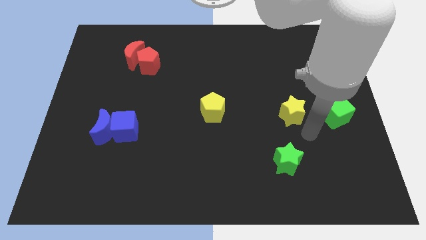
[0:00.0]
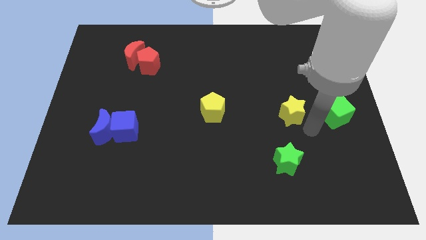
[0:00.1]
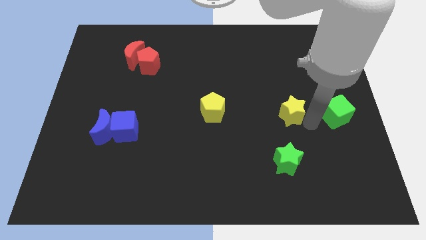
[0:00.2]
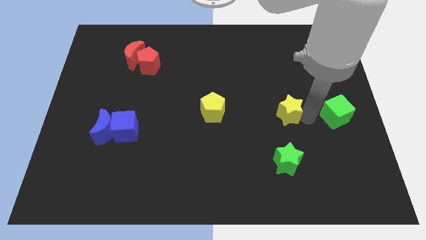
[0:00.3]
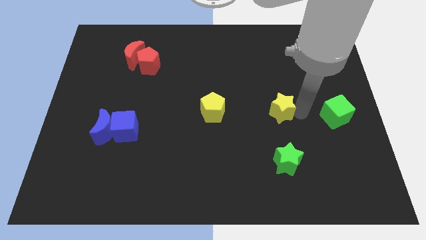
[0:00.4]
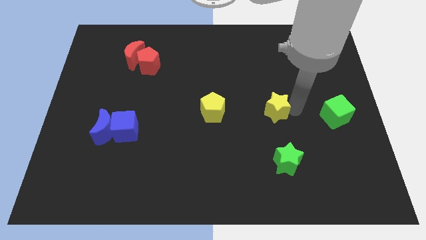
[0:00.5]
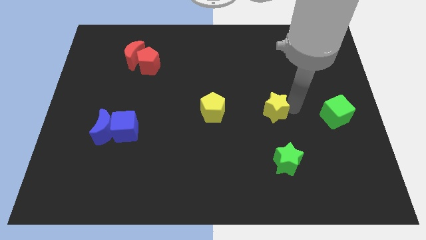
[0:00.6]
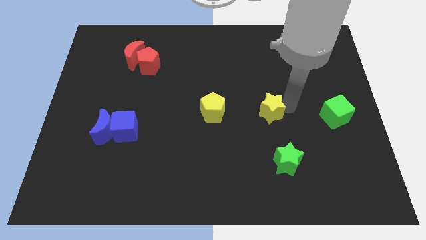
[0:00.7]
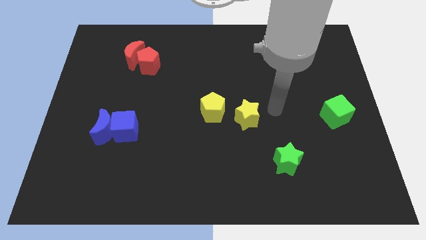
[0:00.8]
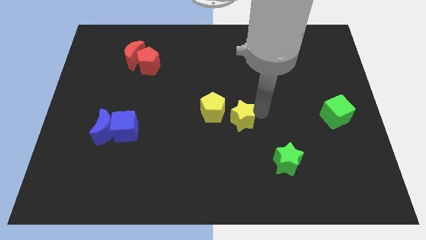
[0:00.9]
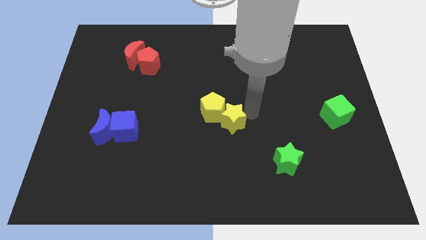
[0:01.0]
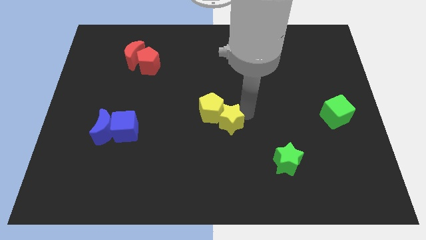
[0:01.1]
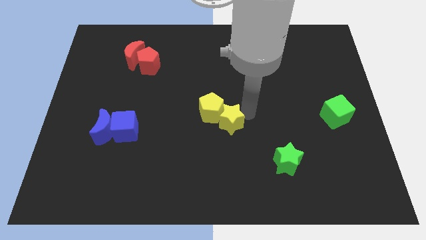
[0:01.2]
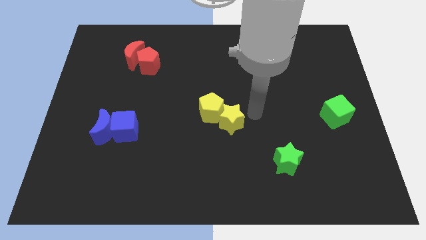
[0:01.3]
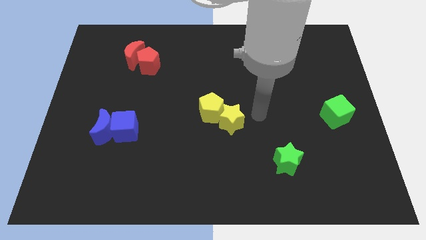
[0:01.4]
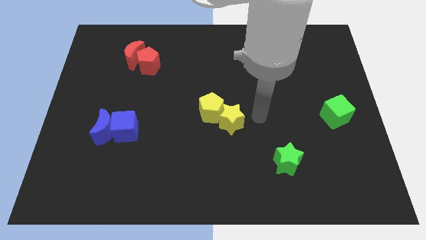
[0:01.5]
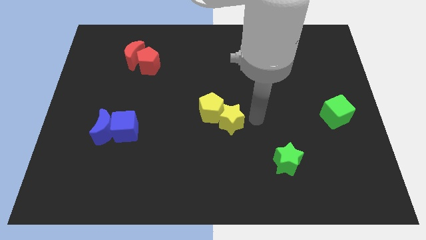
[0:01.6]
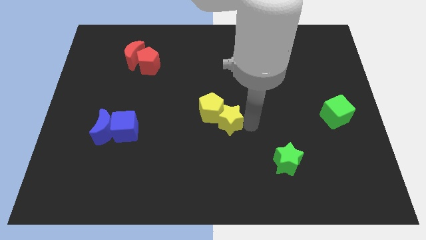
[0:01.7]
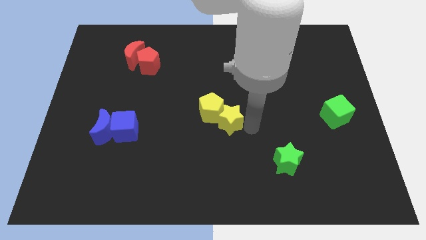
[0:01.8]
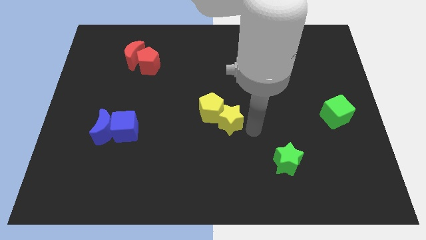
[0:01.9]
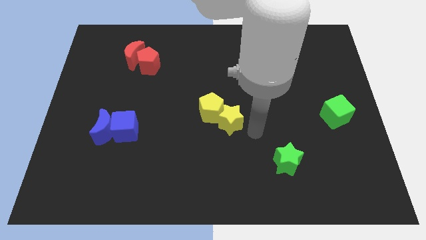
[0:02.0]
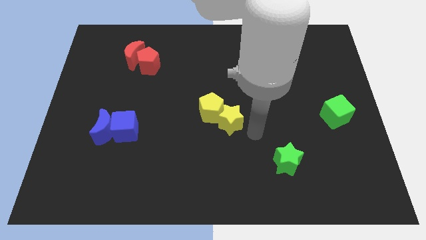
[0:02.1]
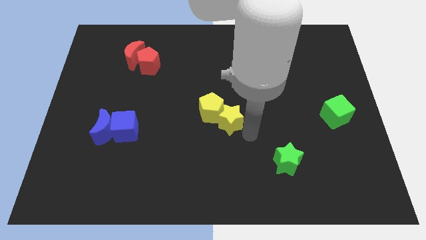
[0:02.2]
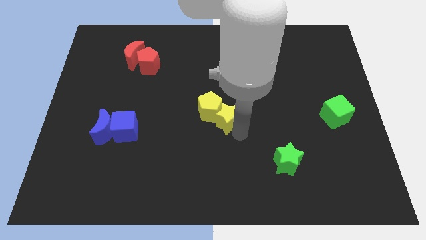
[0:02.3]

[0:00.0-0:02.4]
push the yellow star into the yellow pentagon

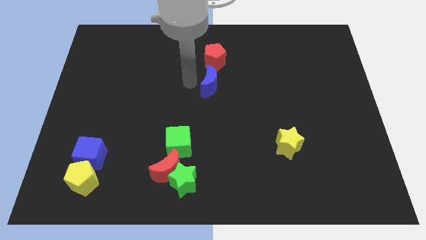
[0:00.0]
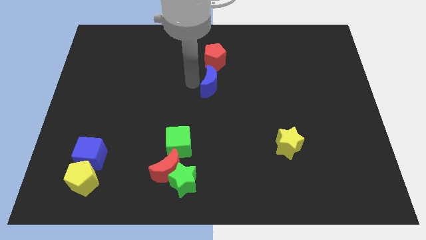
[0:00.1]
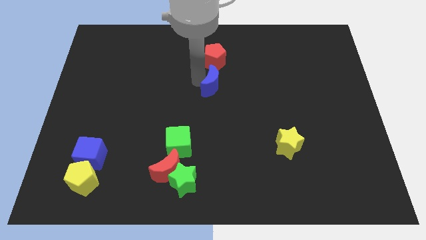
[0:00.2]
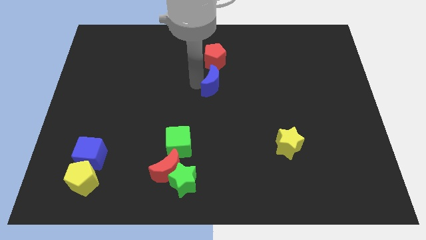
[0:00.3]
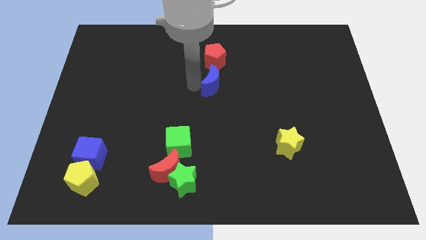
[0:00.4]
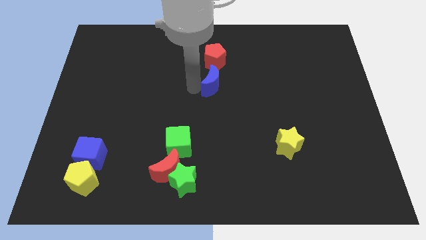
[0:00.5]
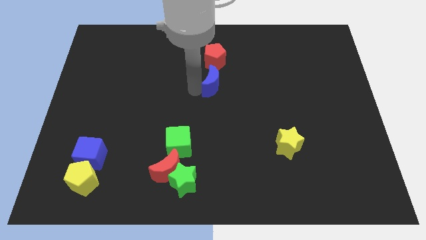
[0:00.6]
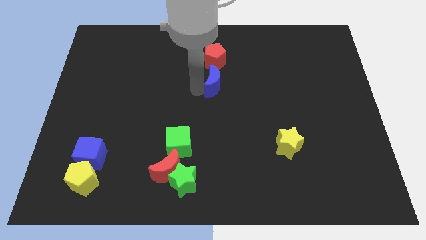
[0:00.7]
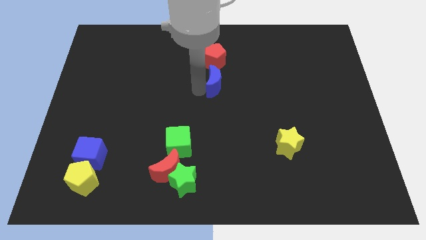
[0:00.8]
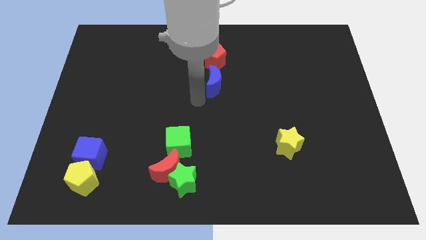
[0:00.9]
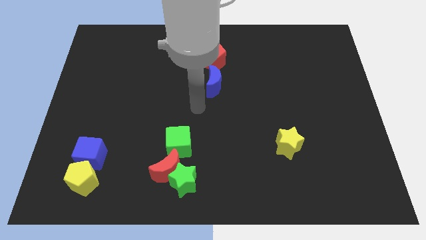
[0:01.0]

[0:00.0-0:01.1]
adjust blue crescent slightly

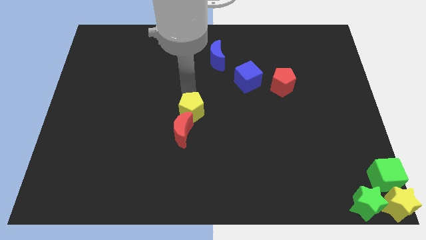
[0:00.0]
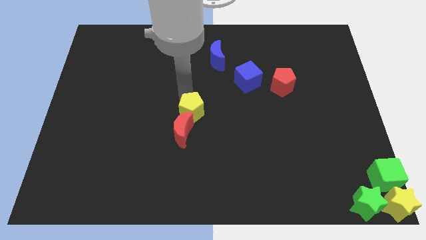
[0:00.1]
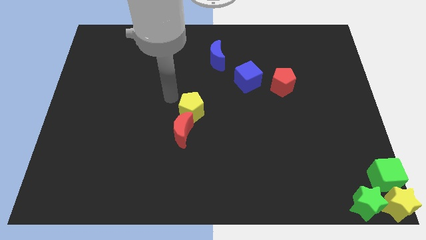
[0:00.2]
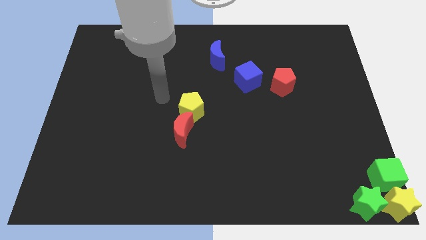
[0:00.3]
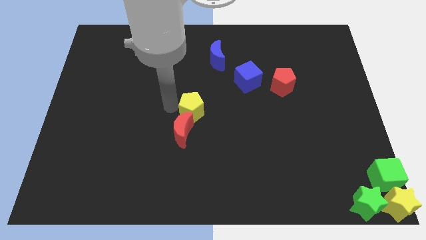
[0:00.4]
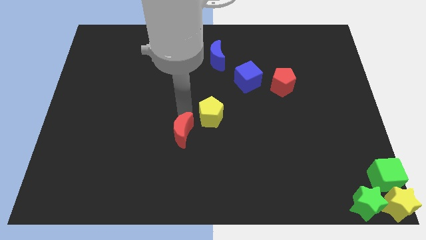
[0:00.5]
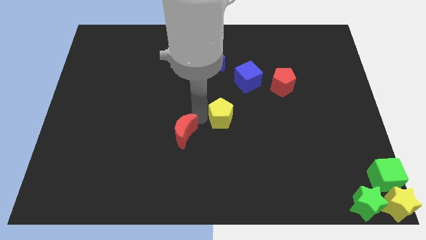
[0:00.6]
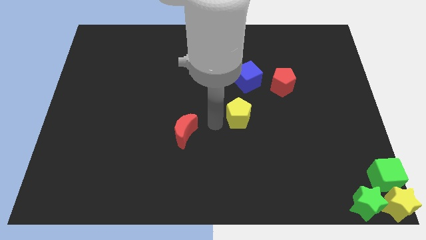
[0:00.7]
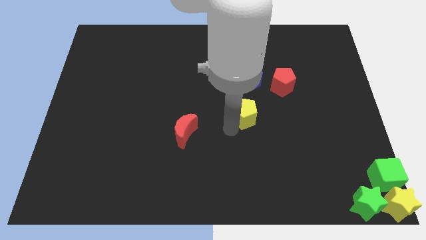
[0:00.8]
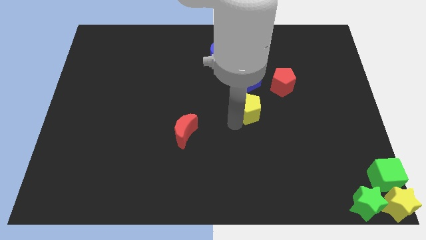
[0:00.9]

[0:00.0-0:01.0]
push the yellow pentagon away from the red crescent

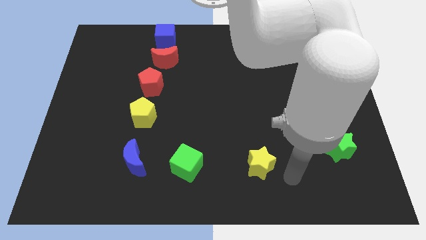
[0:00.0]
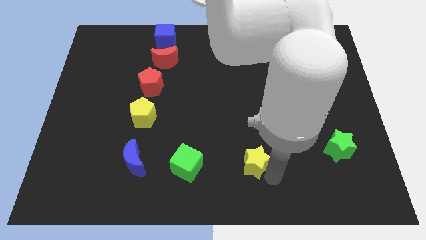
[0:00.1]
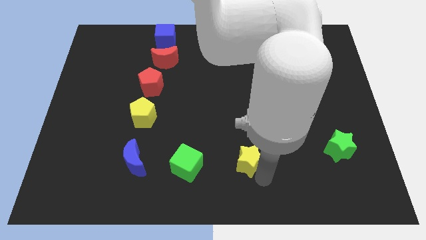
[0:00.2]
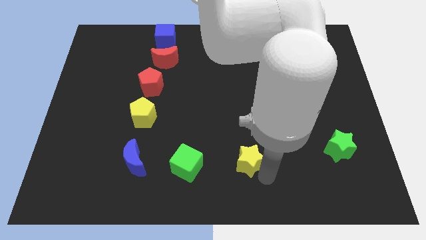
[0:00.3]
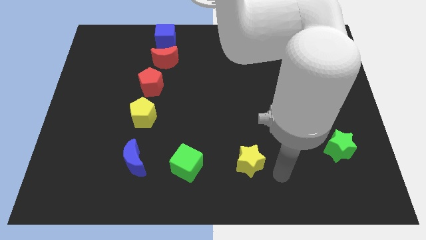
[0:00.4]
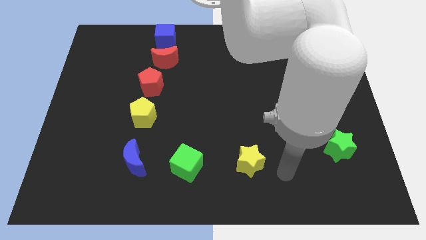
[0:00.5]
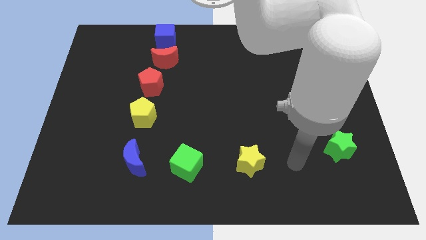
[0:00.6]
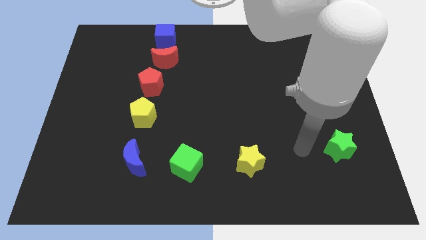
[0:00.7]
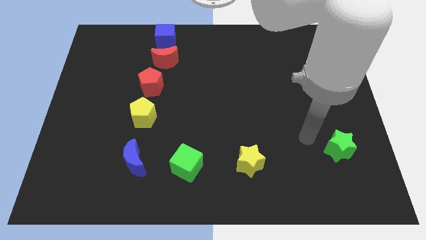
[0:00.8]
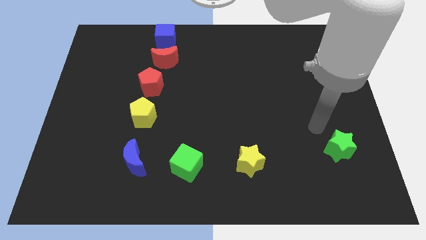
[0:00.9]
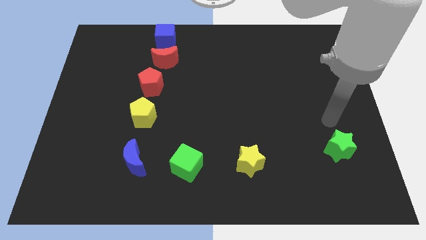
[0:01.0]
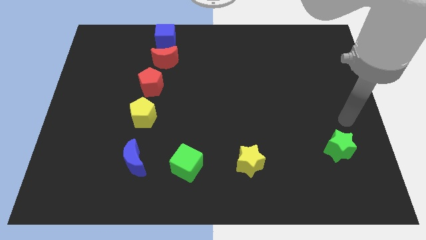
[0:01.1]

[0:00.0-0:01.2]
place the yellow star to the right side of the green cube

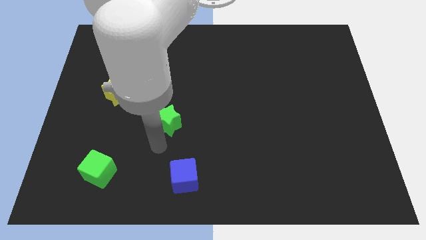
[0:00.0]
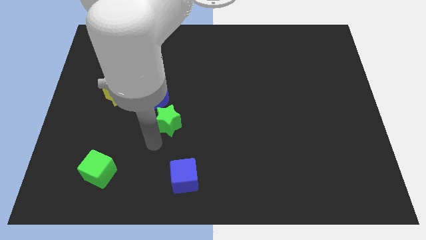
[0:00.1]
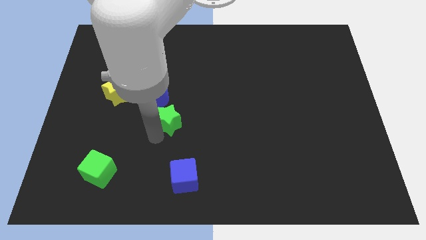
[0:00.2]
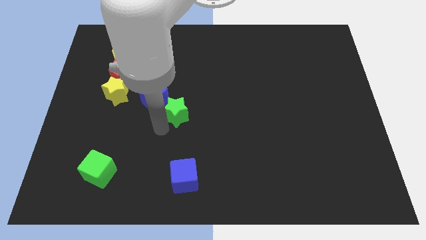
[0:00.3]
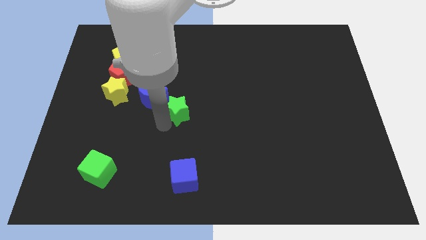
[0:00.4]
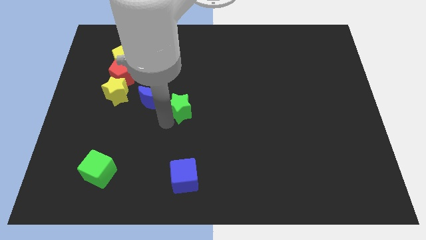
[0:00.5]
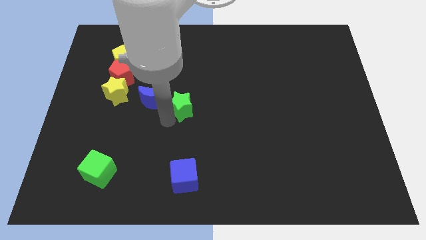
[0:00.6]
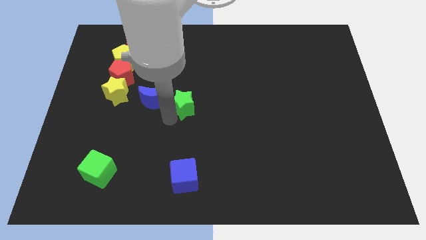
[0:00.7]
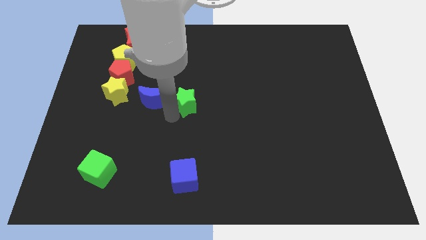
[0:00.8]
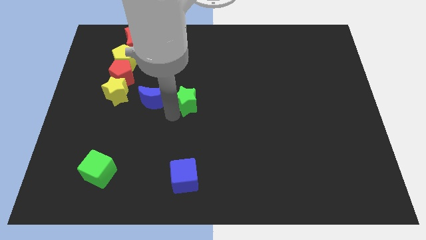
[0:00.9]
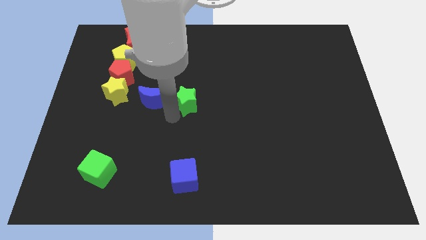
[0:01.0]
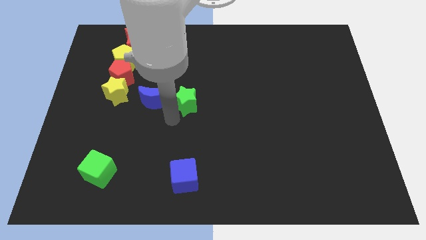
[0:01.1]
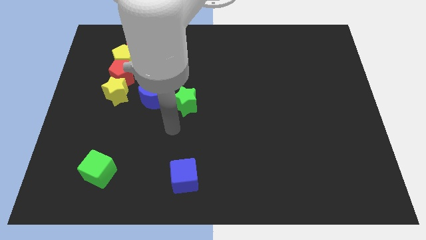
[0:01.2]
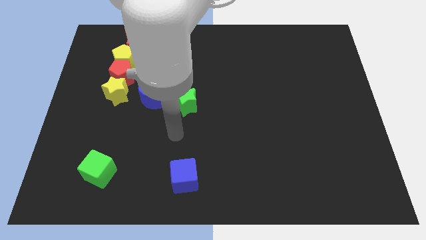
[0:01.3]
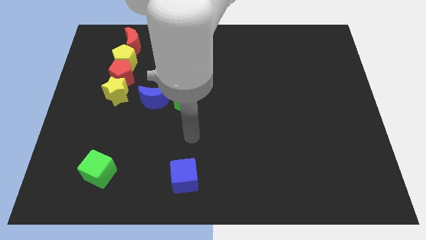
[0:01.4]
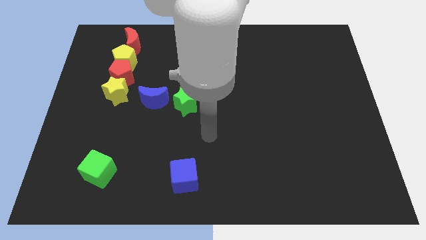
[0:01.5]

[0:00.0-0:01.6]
move the green star diagonal to the right of the blue moon

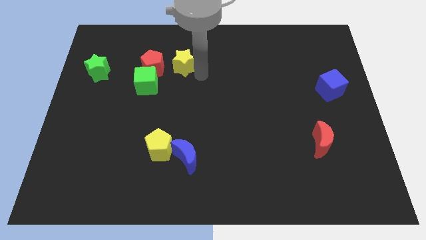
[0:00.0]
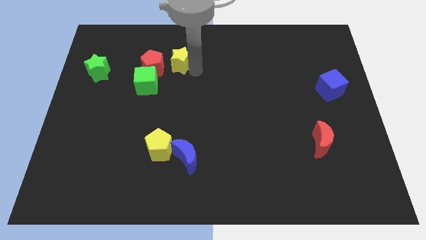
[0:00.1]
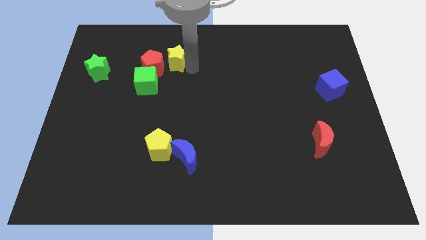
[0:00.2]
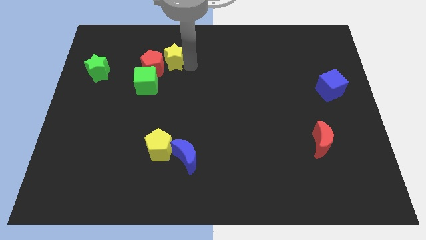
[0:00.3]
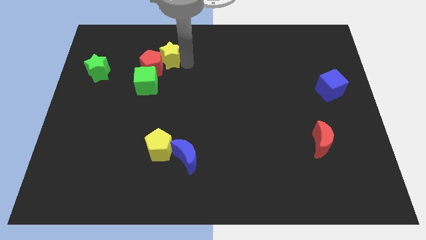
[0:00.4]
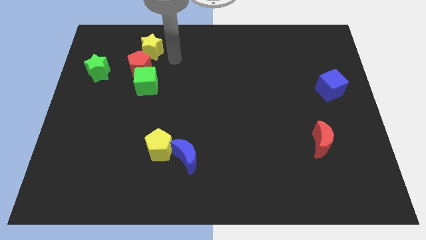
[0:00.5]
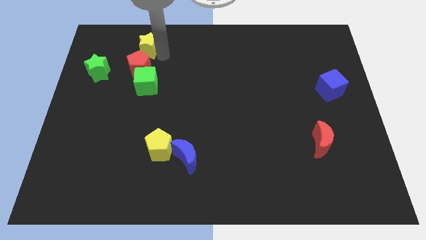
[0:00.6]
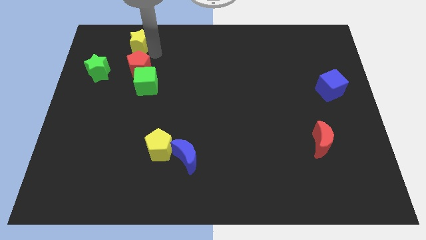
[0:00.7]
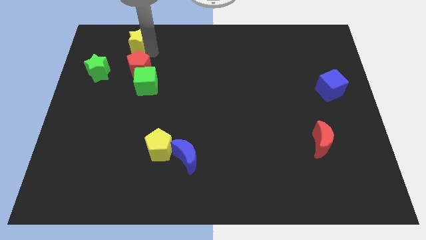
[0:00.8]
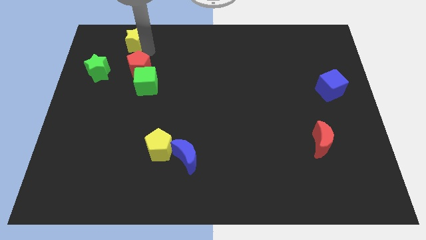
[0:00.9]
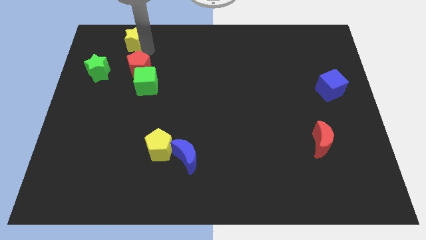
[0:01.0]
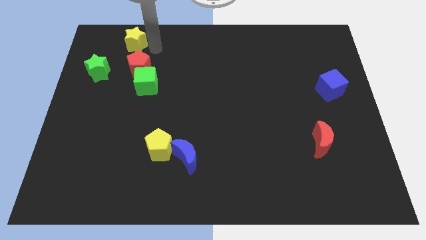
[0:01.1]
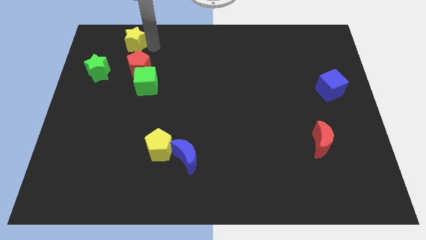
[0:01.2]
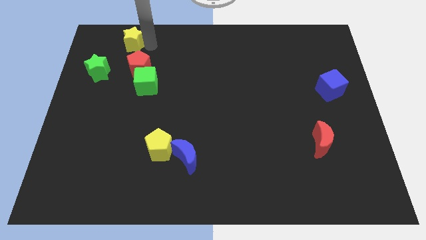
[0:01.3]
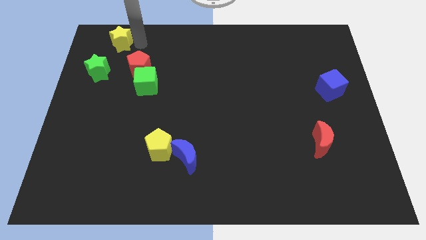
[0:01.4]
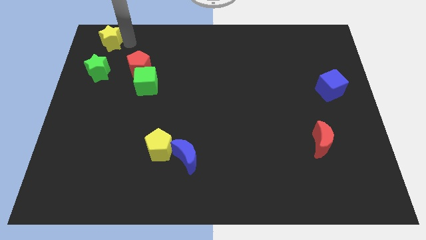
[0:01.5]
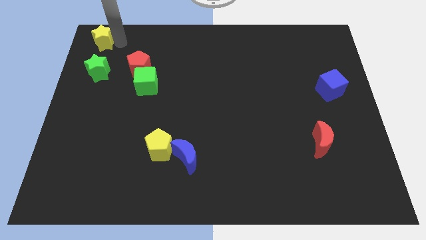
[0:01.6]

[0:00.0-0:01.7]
move yellow star above green star
